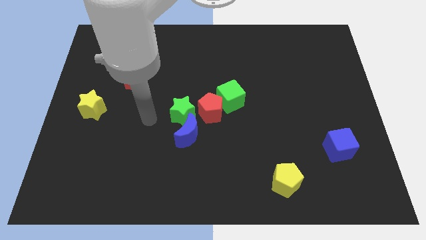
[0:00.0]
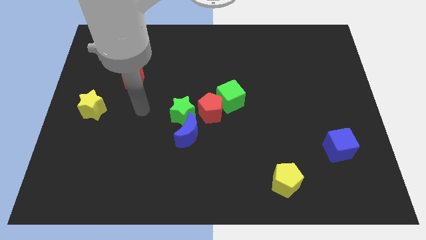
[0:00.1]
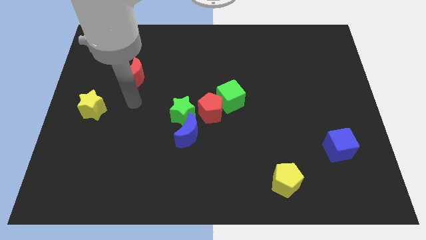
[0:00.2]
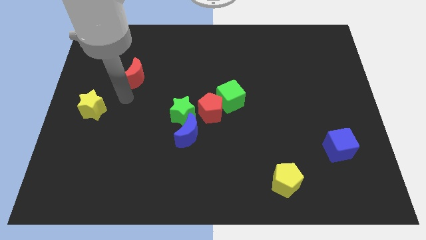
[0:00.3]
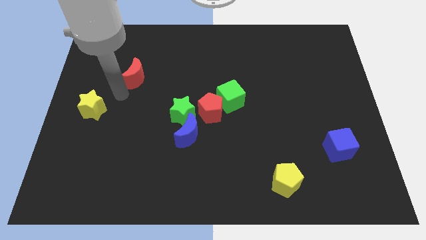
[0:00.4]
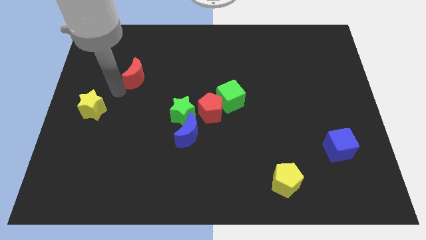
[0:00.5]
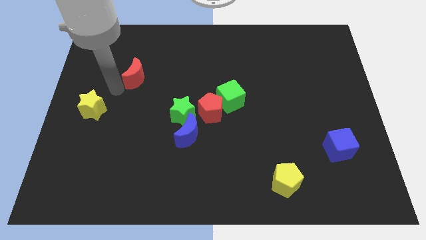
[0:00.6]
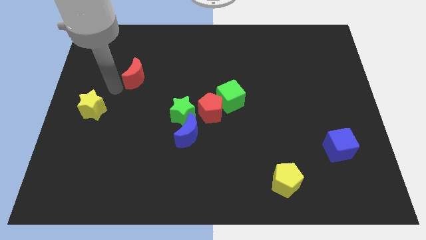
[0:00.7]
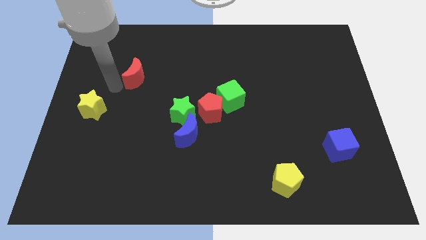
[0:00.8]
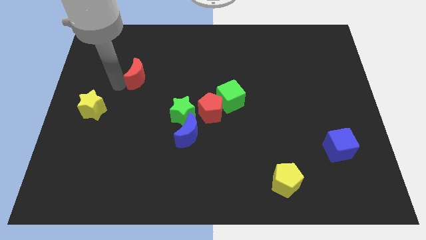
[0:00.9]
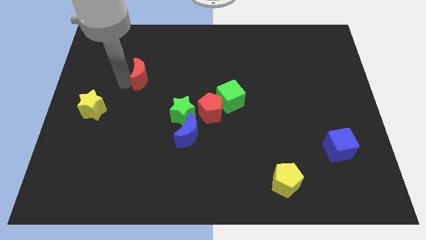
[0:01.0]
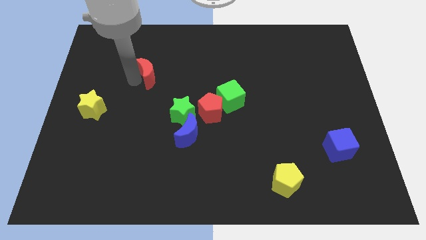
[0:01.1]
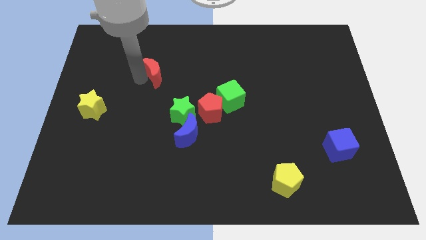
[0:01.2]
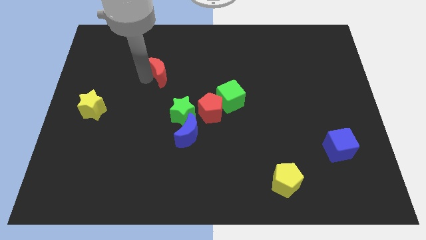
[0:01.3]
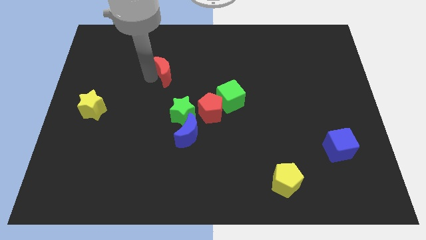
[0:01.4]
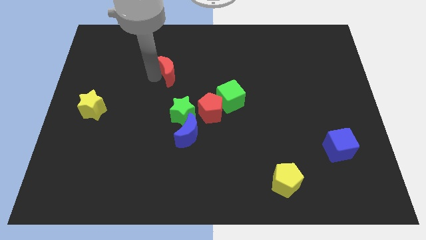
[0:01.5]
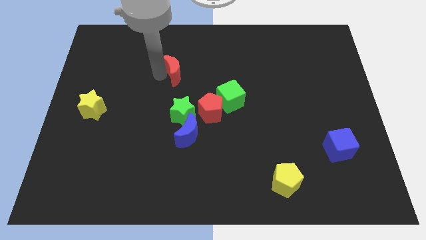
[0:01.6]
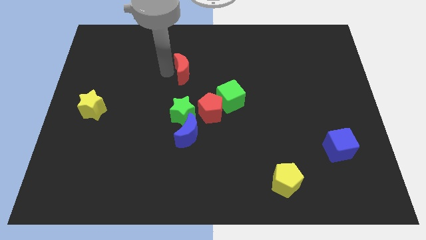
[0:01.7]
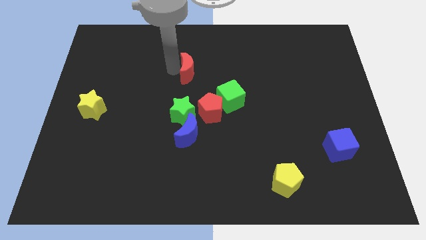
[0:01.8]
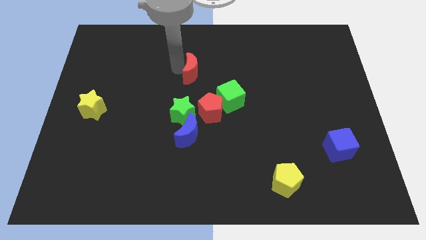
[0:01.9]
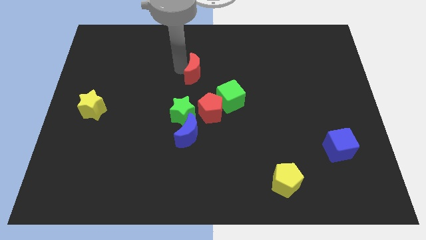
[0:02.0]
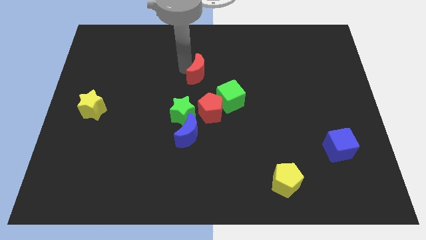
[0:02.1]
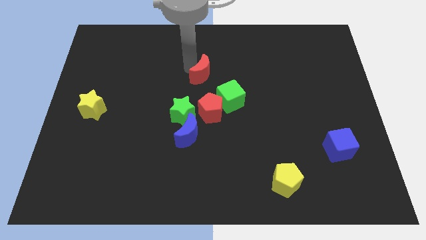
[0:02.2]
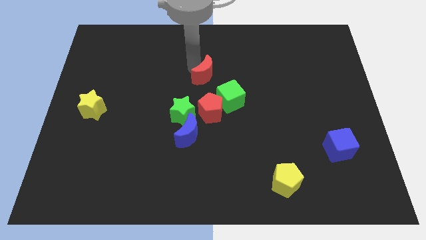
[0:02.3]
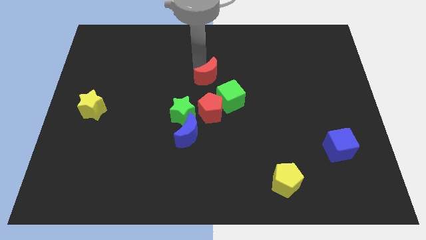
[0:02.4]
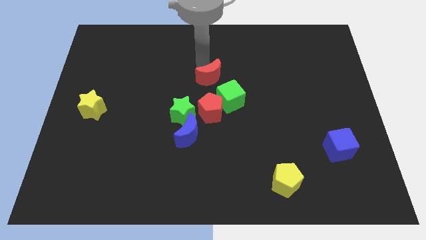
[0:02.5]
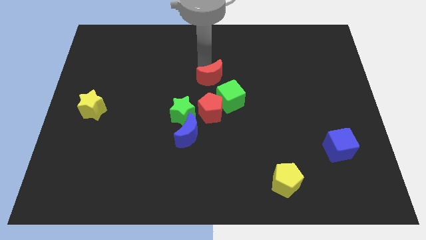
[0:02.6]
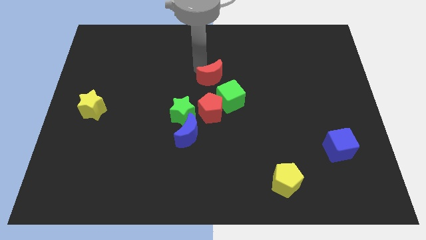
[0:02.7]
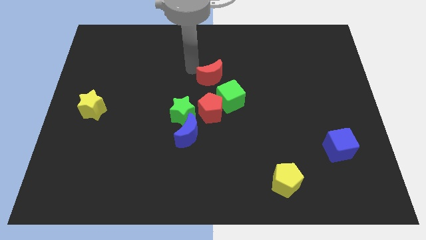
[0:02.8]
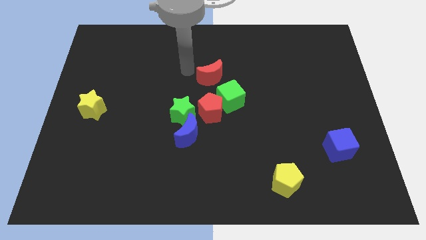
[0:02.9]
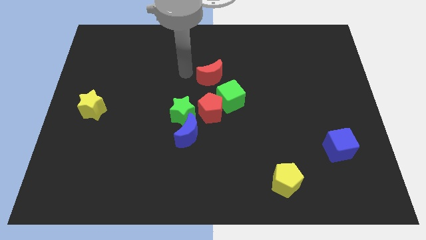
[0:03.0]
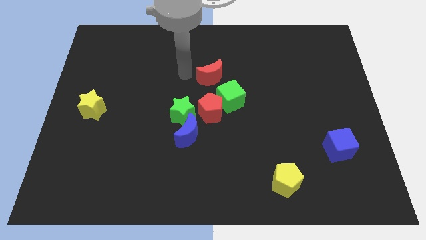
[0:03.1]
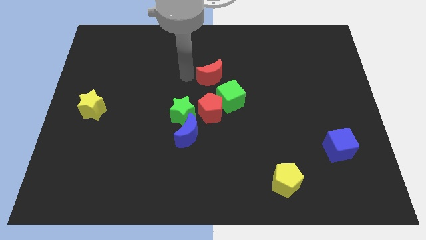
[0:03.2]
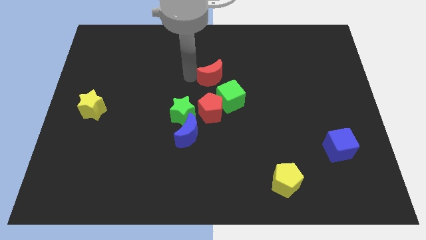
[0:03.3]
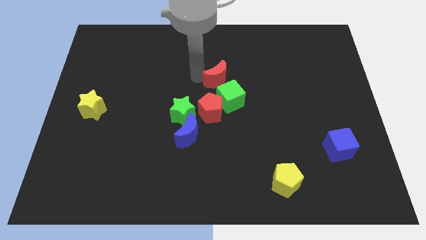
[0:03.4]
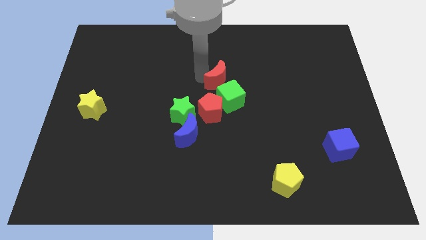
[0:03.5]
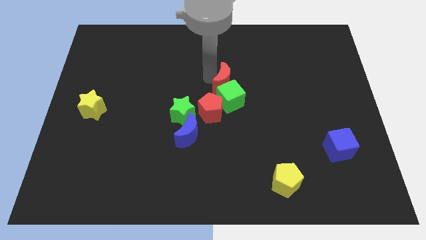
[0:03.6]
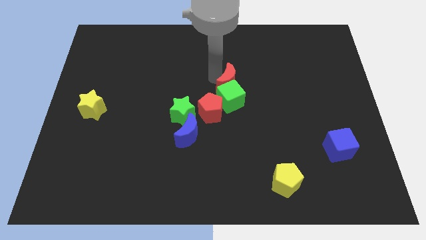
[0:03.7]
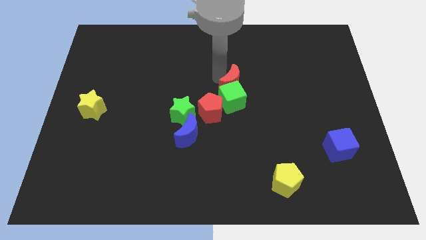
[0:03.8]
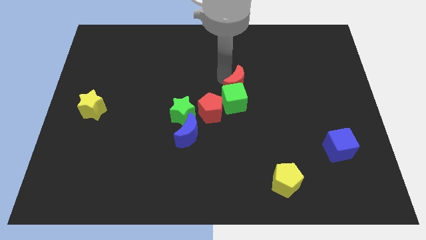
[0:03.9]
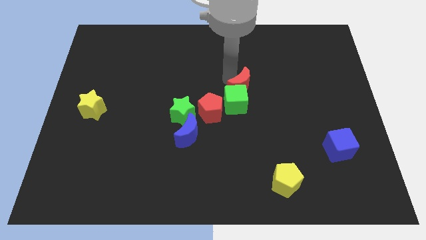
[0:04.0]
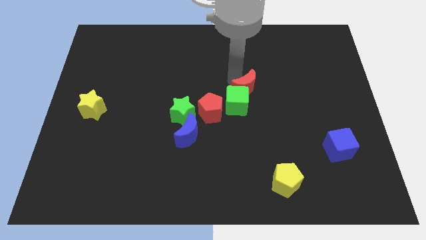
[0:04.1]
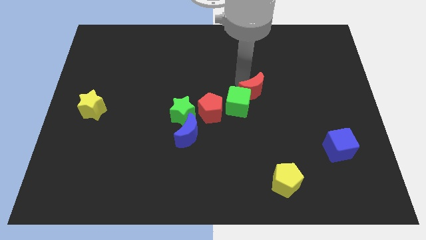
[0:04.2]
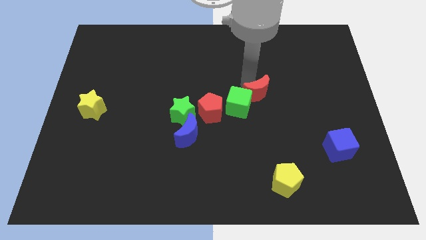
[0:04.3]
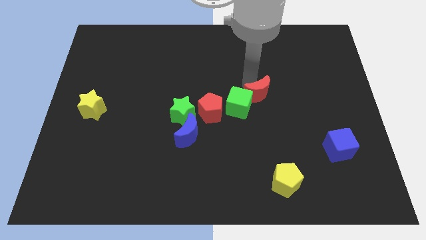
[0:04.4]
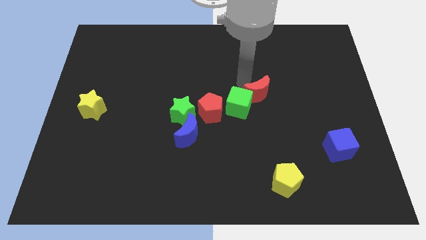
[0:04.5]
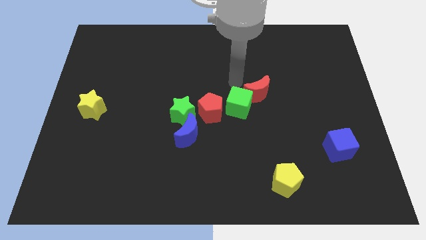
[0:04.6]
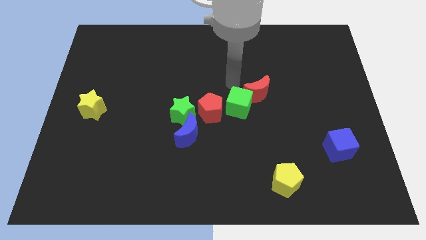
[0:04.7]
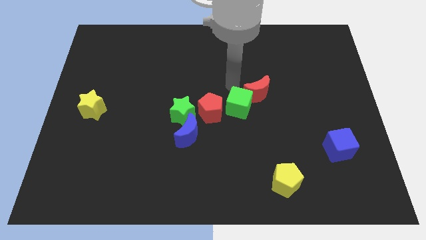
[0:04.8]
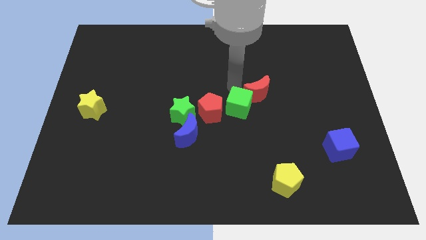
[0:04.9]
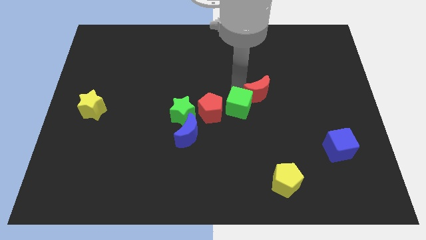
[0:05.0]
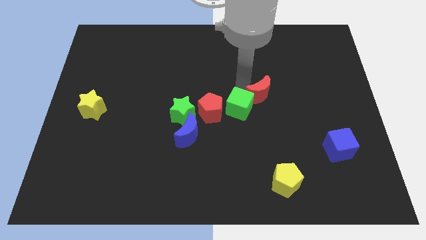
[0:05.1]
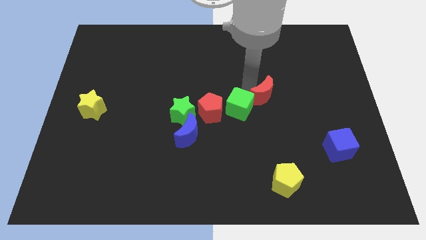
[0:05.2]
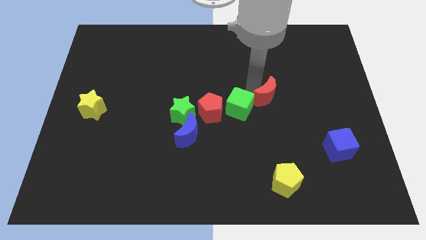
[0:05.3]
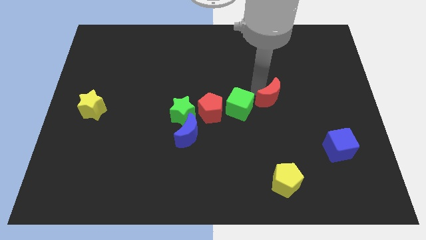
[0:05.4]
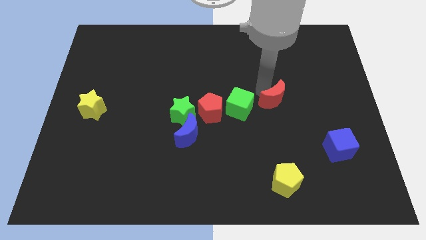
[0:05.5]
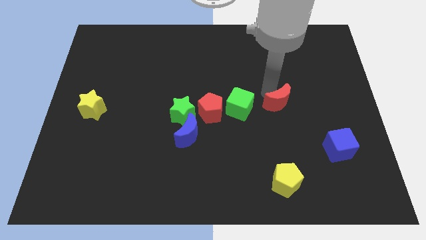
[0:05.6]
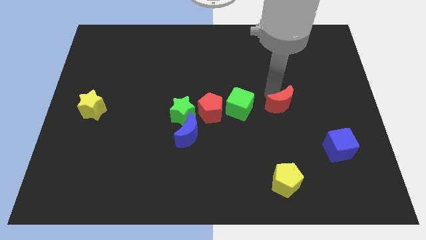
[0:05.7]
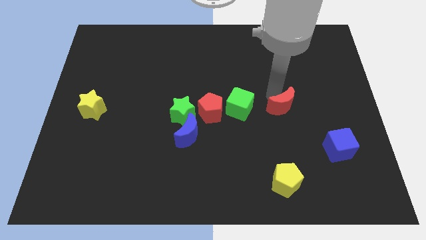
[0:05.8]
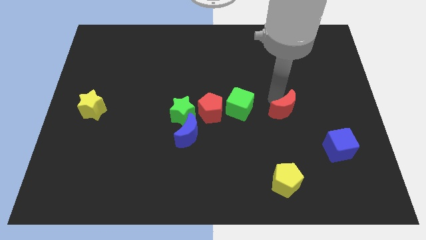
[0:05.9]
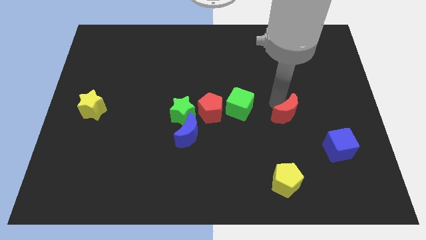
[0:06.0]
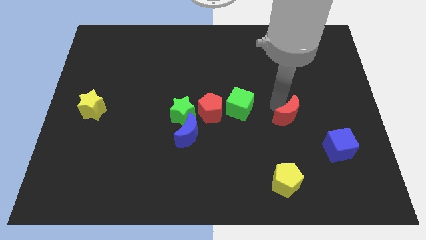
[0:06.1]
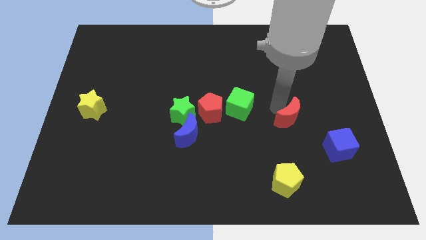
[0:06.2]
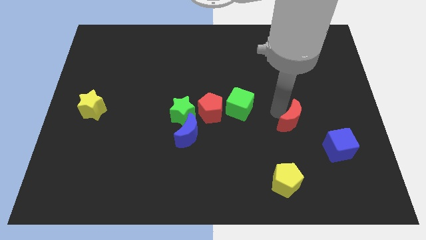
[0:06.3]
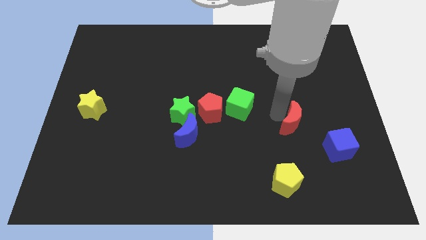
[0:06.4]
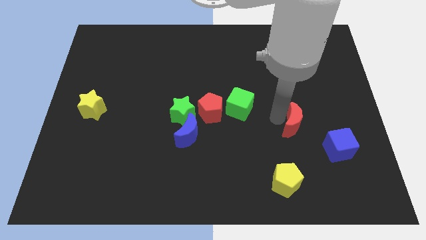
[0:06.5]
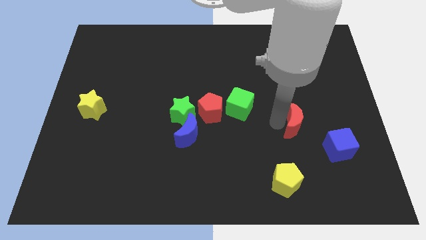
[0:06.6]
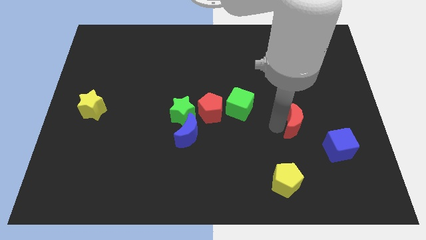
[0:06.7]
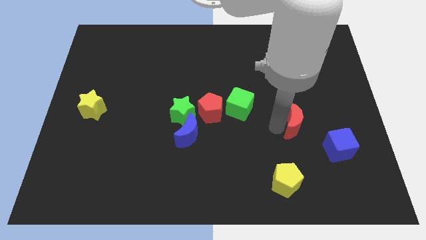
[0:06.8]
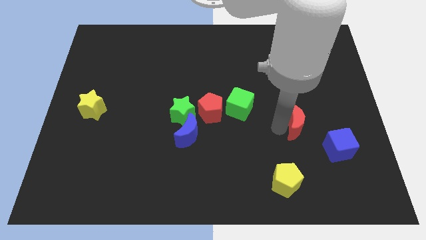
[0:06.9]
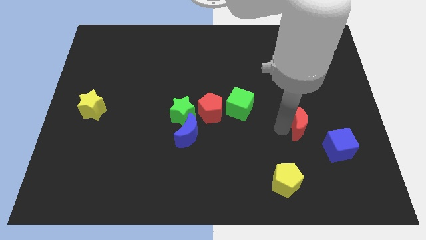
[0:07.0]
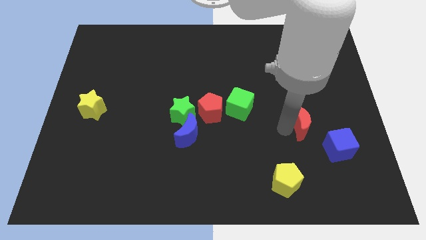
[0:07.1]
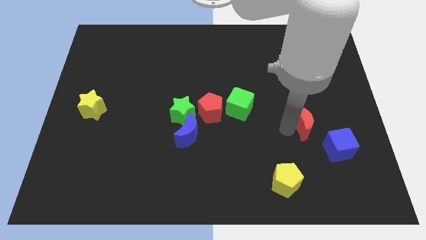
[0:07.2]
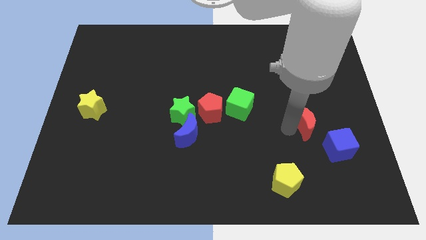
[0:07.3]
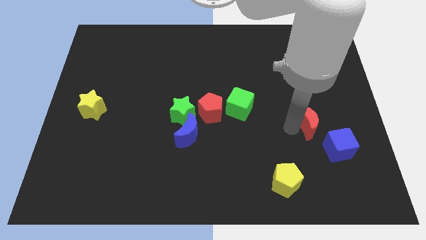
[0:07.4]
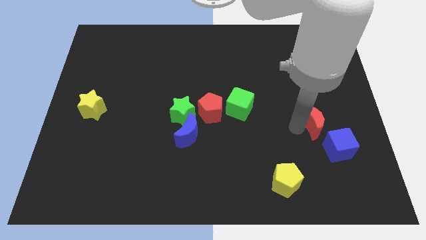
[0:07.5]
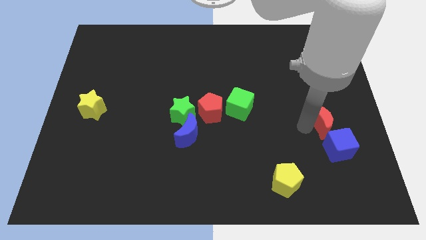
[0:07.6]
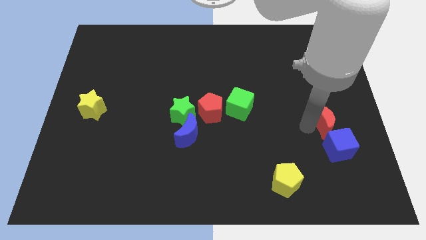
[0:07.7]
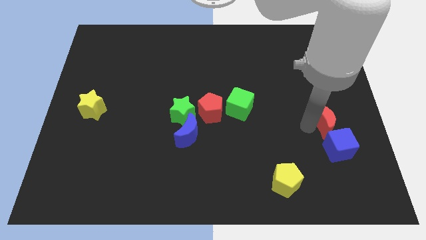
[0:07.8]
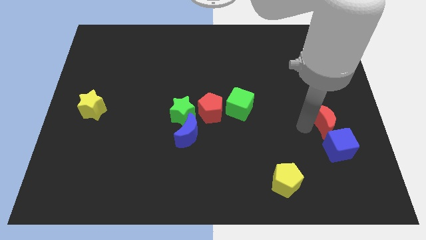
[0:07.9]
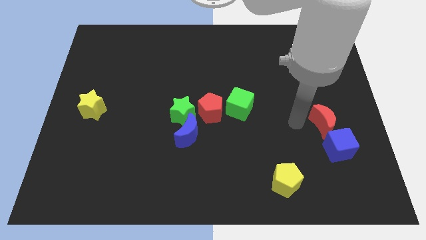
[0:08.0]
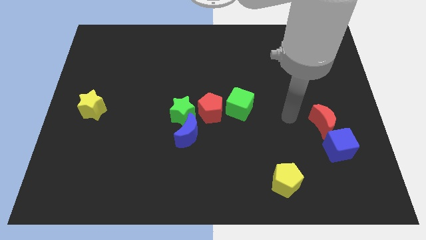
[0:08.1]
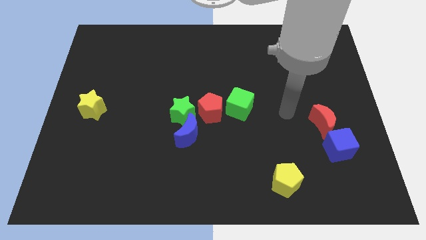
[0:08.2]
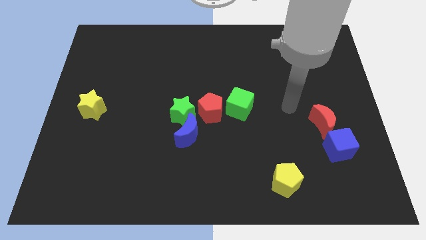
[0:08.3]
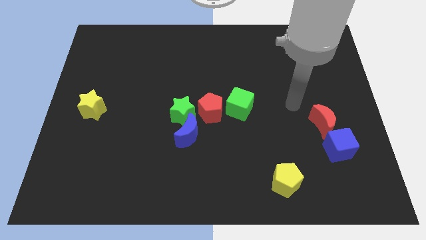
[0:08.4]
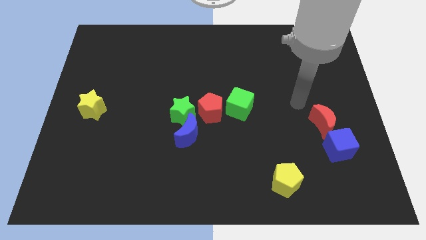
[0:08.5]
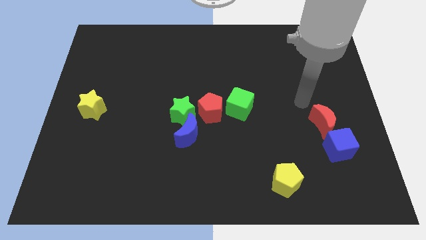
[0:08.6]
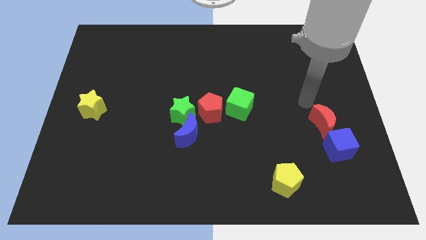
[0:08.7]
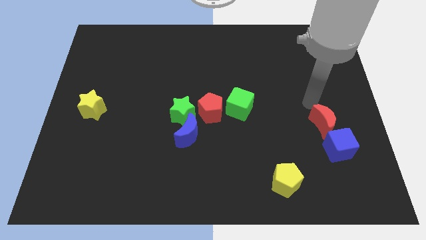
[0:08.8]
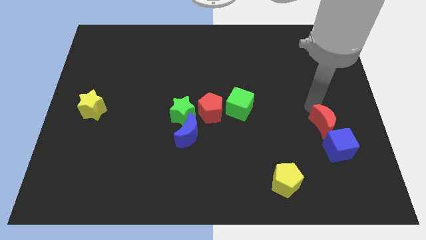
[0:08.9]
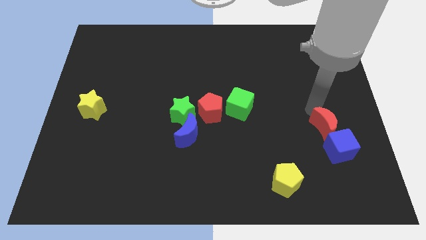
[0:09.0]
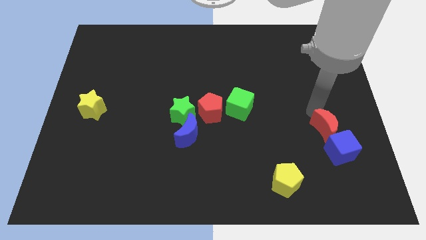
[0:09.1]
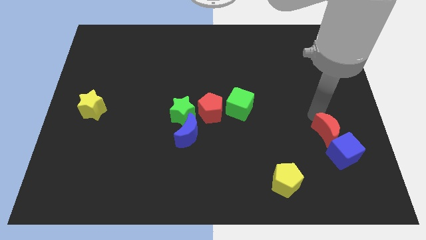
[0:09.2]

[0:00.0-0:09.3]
move the red moon to the blue cube
